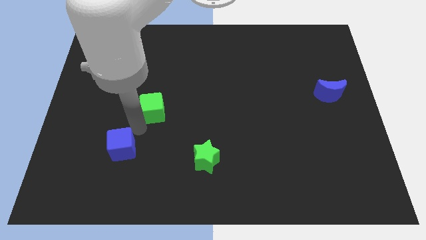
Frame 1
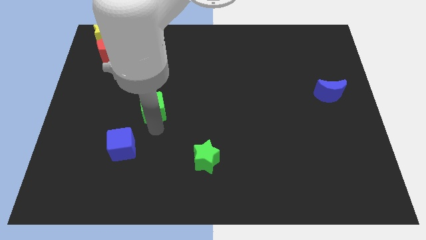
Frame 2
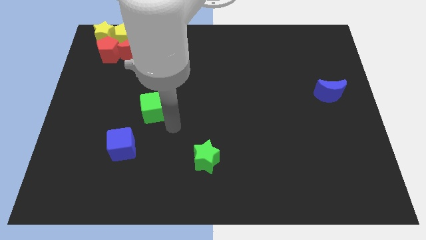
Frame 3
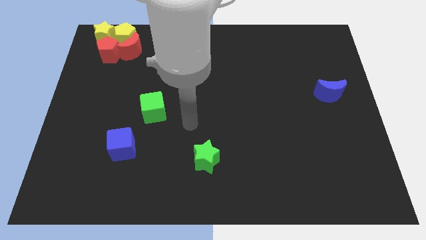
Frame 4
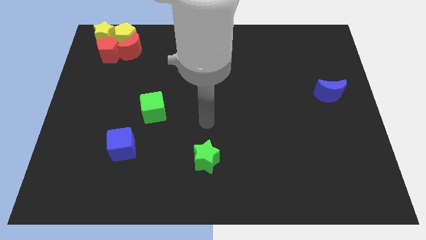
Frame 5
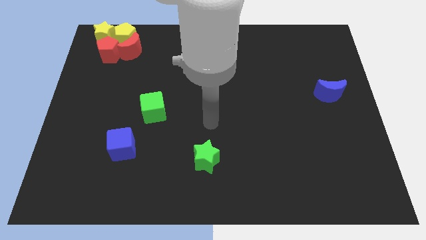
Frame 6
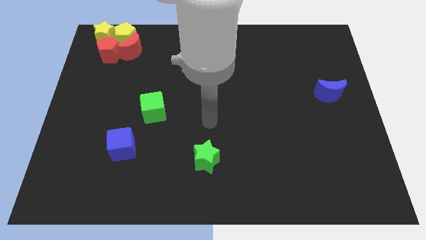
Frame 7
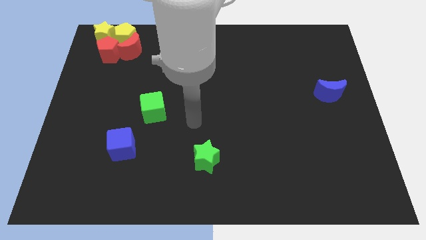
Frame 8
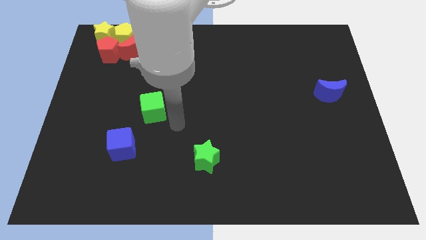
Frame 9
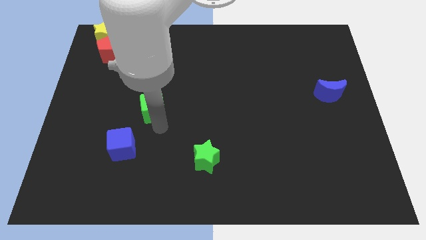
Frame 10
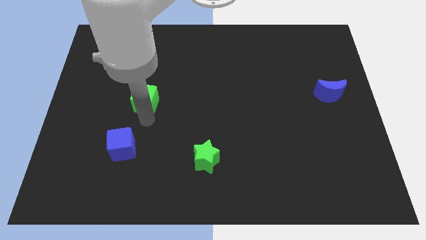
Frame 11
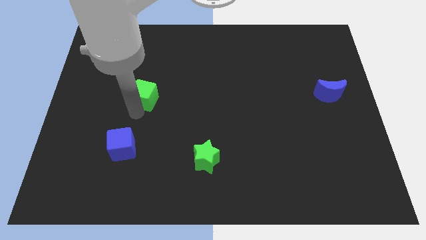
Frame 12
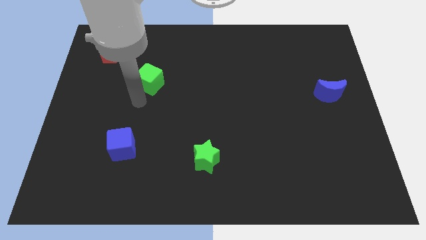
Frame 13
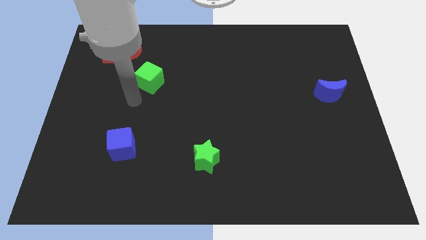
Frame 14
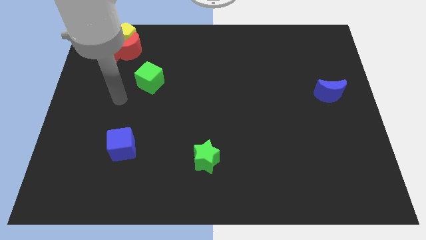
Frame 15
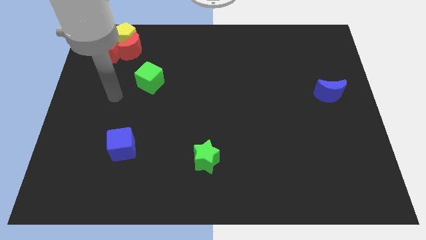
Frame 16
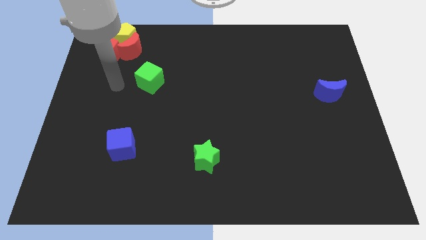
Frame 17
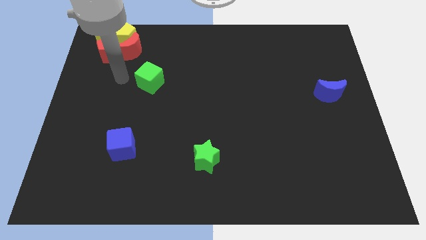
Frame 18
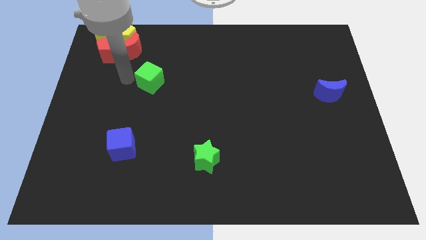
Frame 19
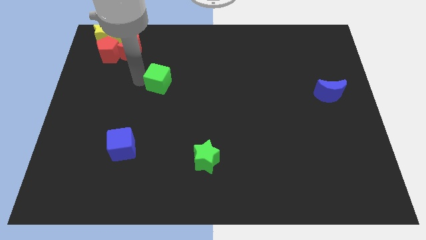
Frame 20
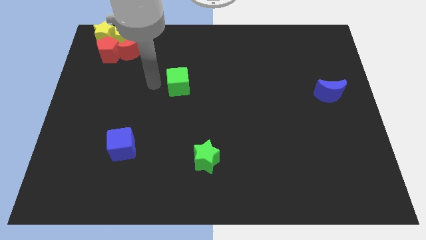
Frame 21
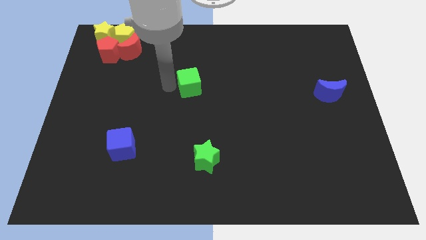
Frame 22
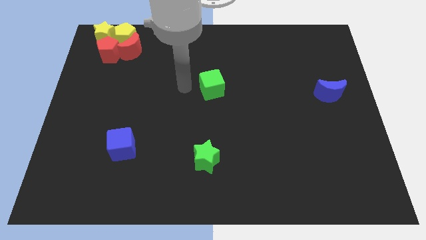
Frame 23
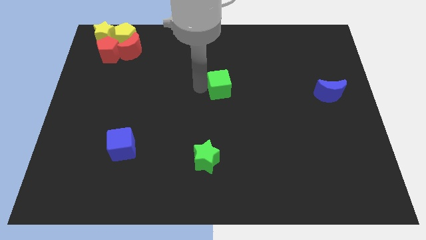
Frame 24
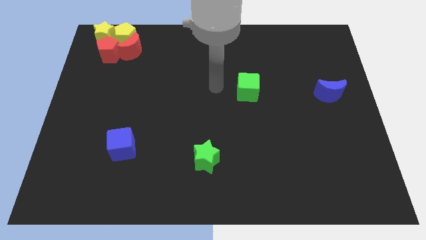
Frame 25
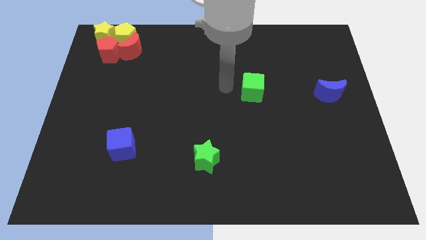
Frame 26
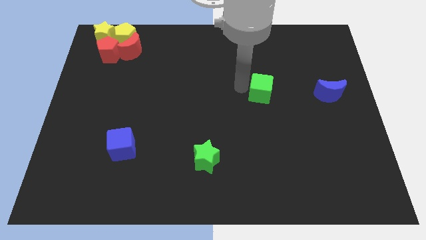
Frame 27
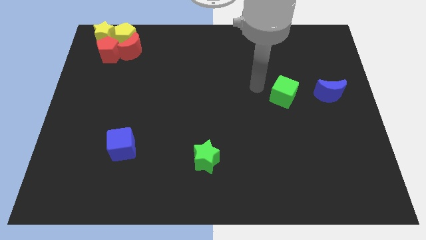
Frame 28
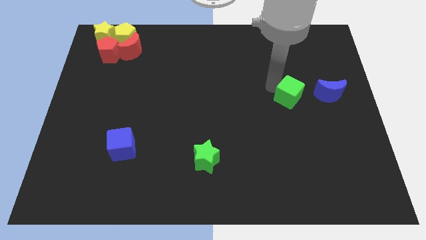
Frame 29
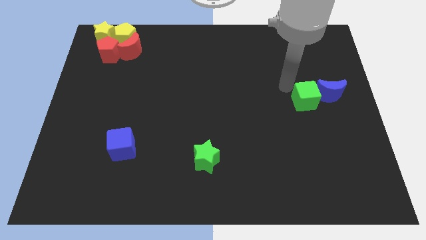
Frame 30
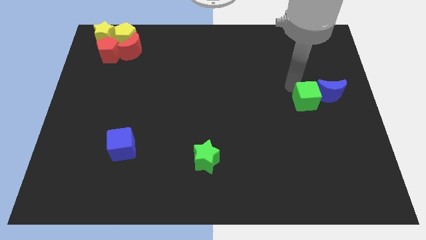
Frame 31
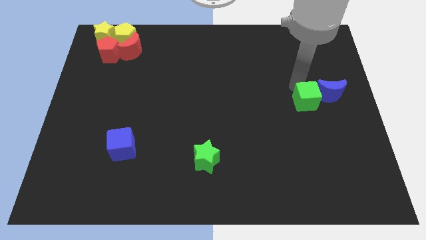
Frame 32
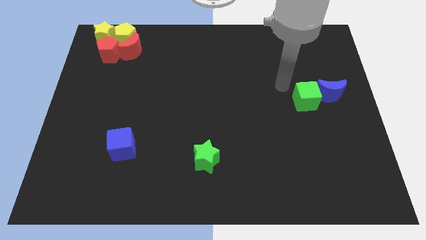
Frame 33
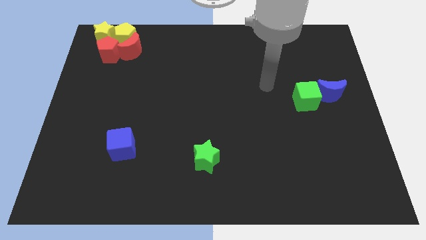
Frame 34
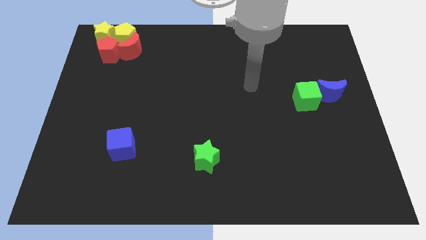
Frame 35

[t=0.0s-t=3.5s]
push the green cube into the blue crescent

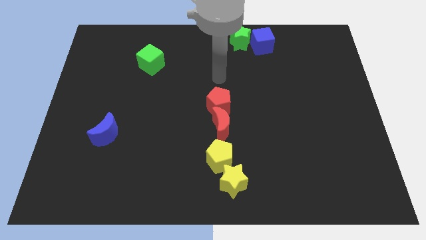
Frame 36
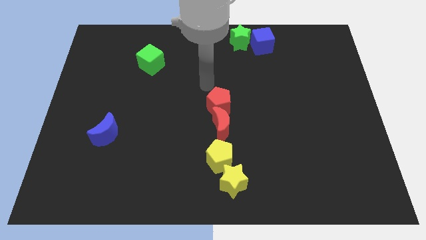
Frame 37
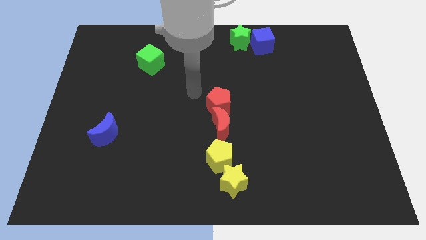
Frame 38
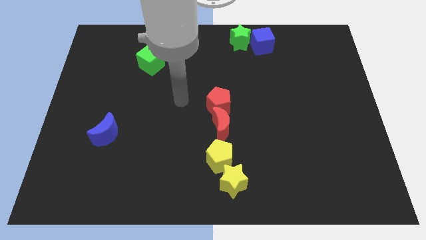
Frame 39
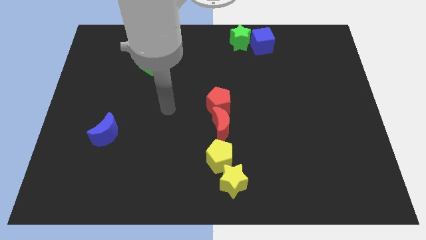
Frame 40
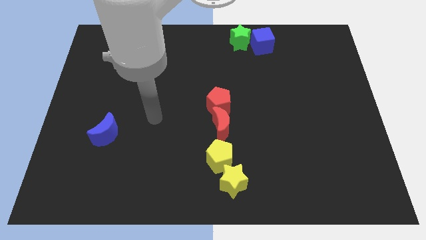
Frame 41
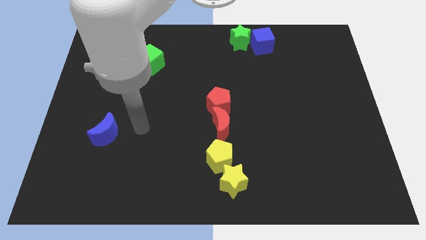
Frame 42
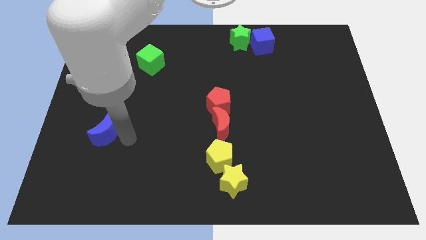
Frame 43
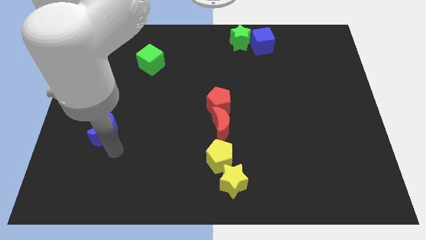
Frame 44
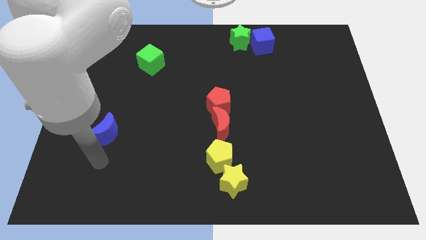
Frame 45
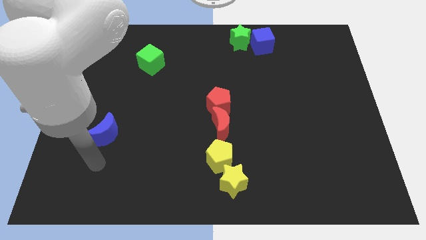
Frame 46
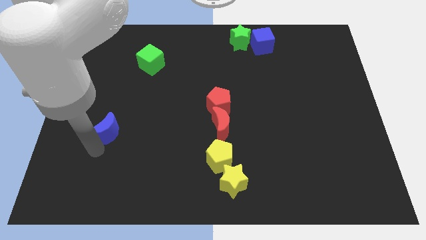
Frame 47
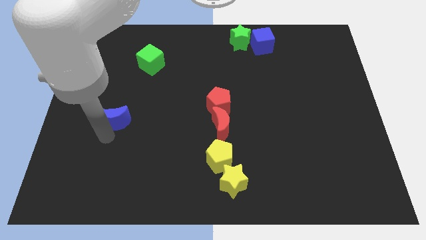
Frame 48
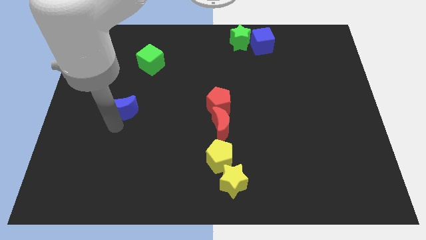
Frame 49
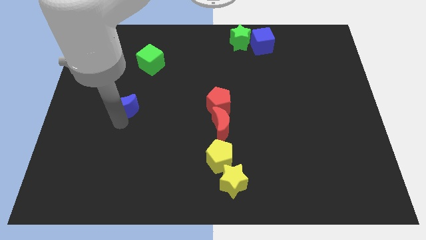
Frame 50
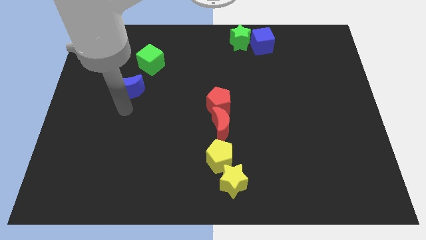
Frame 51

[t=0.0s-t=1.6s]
push the blue moon towards top

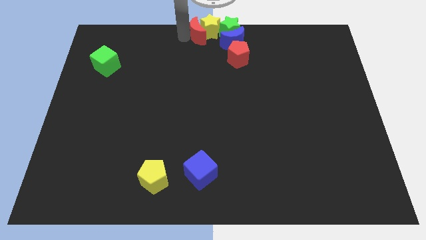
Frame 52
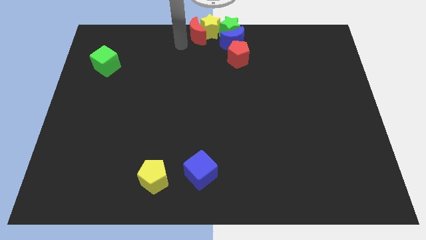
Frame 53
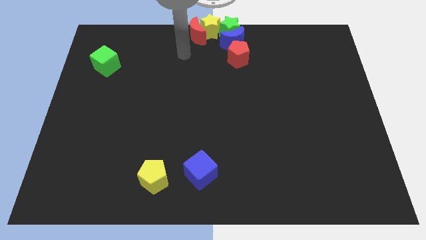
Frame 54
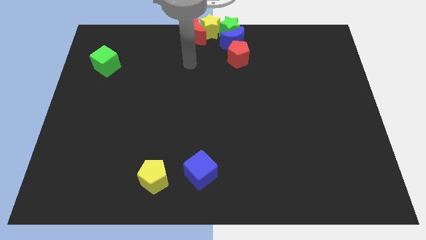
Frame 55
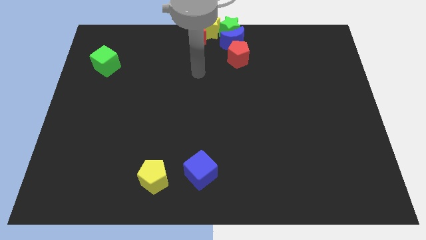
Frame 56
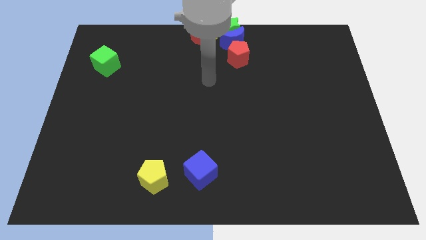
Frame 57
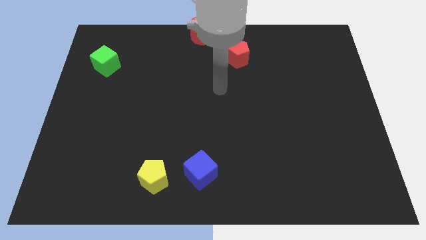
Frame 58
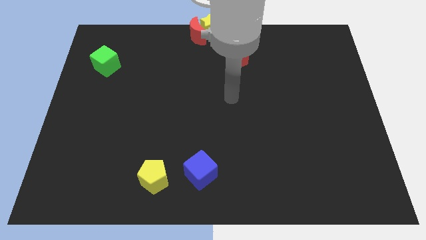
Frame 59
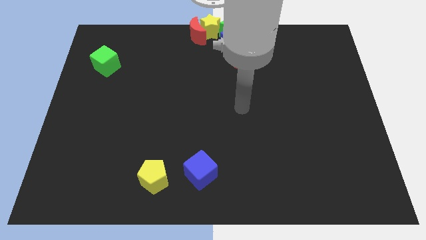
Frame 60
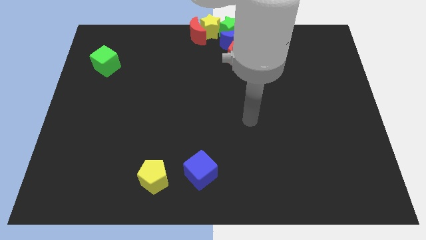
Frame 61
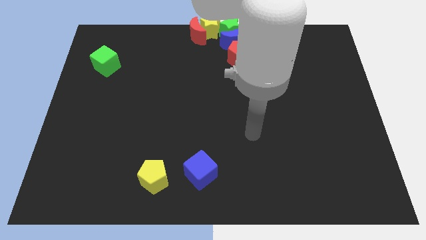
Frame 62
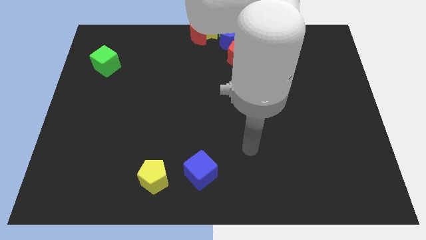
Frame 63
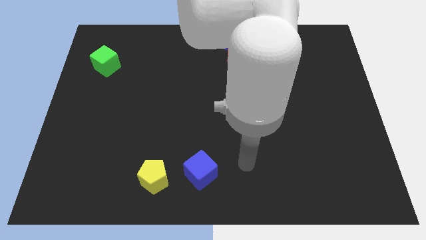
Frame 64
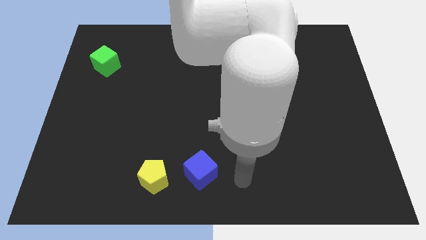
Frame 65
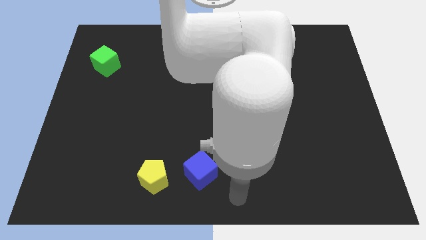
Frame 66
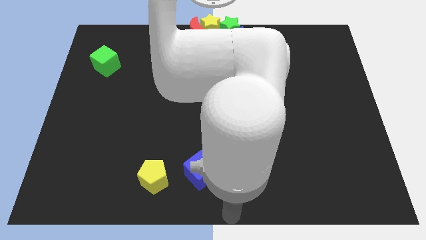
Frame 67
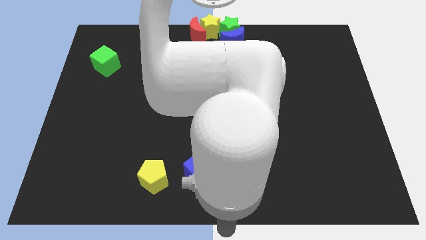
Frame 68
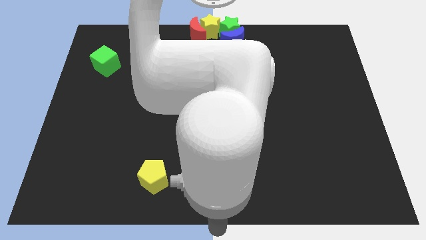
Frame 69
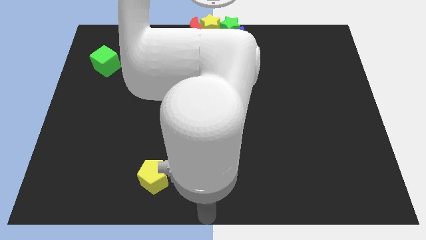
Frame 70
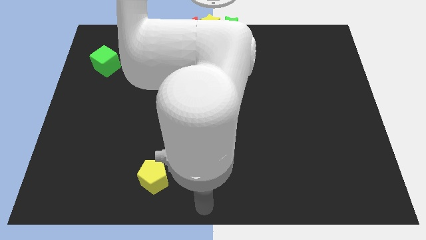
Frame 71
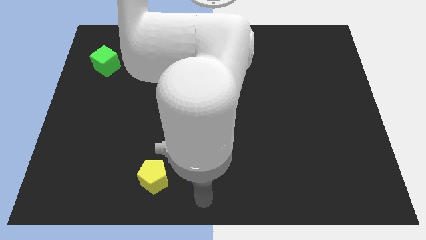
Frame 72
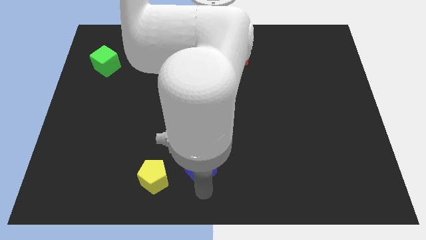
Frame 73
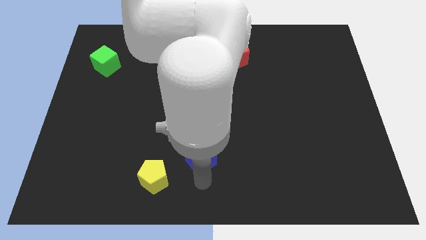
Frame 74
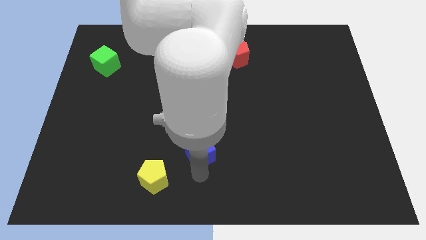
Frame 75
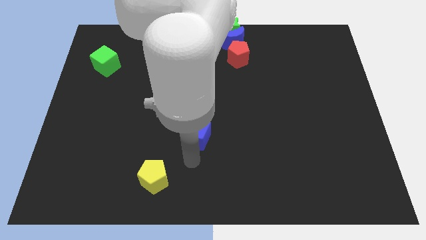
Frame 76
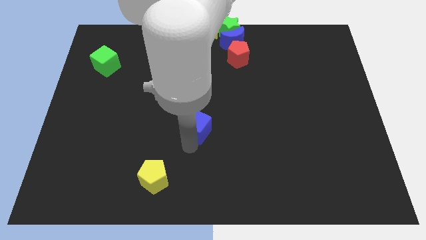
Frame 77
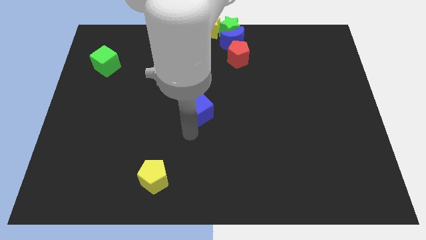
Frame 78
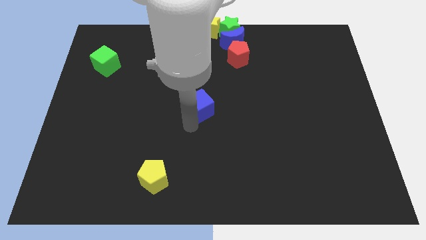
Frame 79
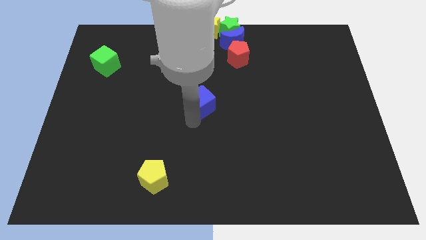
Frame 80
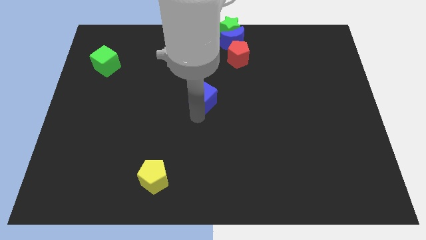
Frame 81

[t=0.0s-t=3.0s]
place blue cube to the center of the board

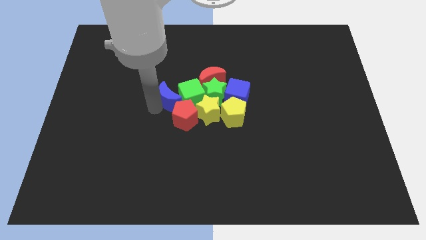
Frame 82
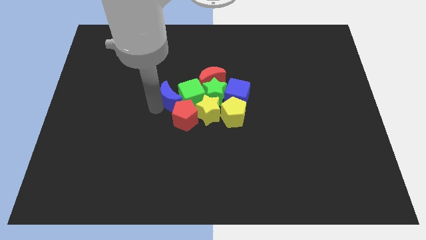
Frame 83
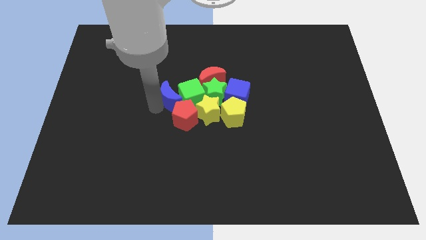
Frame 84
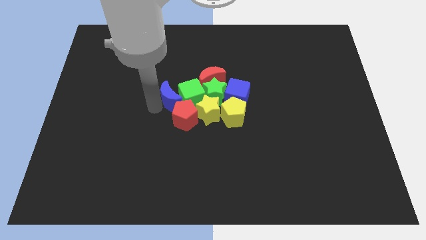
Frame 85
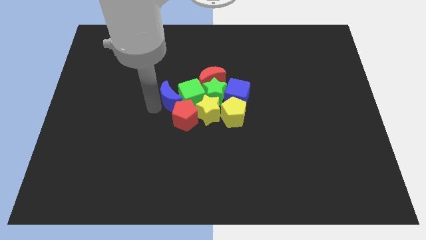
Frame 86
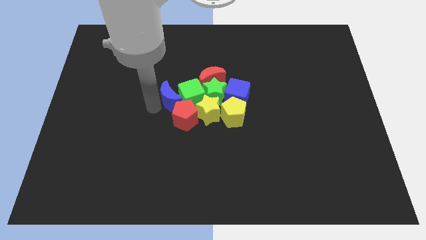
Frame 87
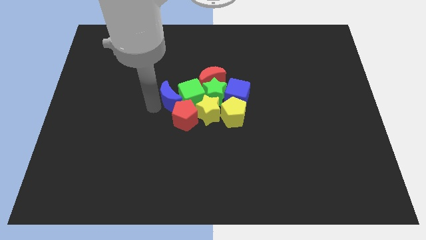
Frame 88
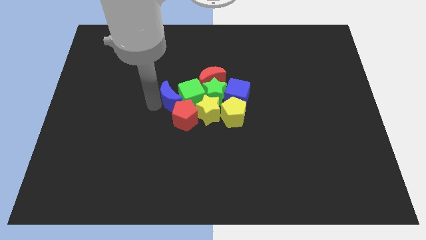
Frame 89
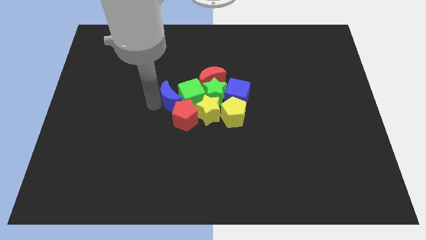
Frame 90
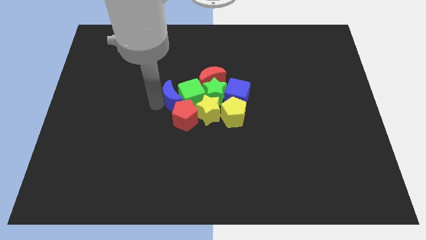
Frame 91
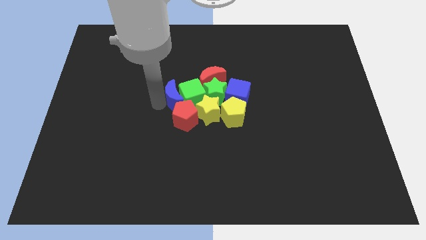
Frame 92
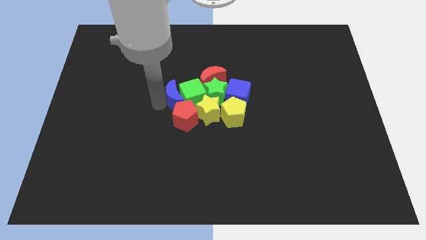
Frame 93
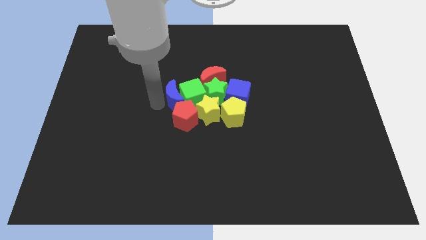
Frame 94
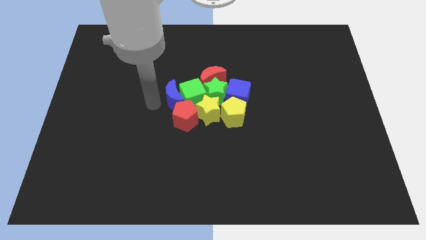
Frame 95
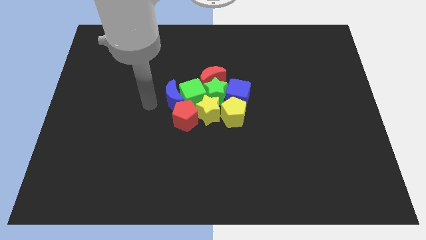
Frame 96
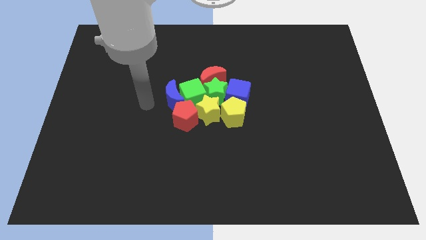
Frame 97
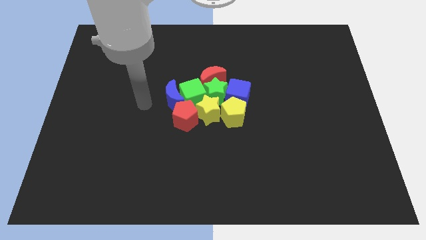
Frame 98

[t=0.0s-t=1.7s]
place blue moon left of green cube towards the middle of the board
